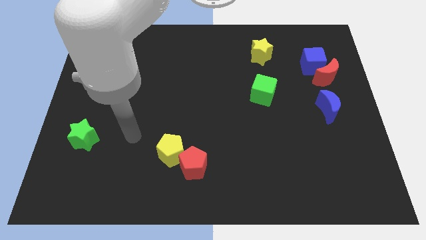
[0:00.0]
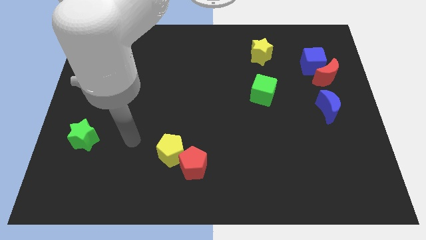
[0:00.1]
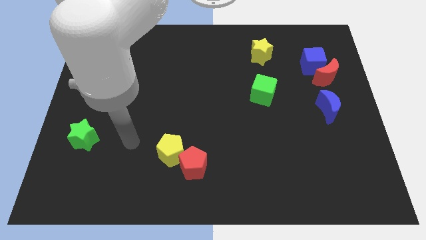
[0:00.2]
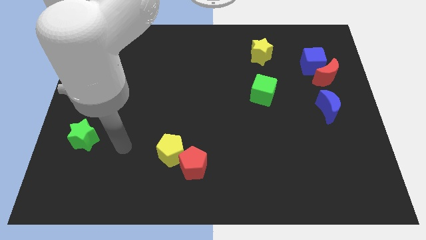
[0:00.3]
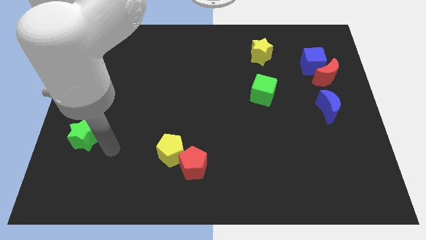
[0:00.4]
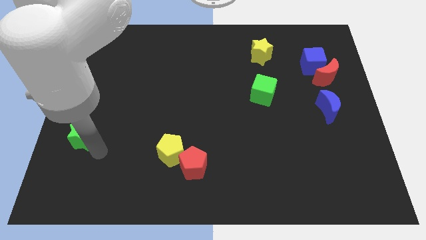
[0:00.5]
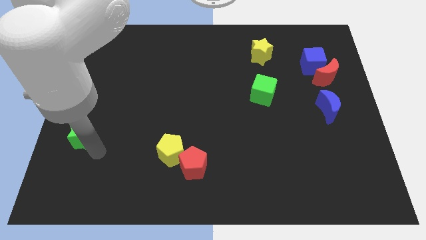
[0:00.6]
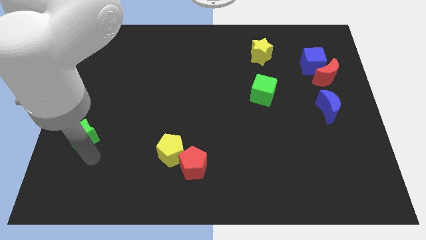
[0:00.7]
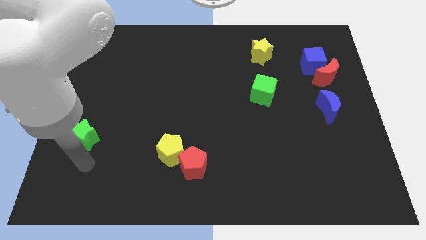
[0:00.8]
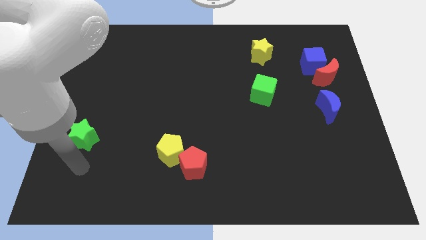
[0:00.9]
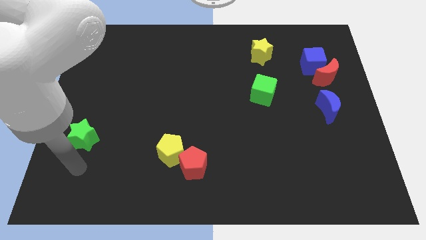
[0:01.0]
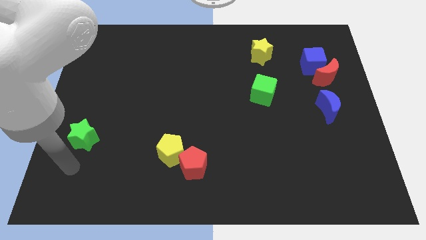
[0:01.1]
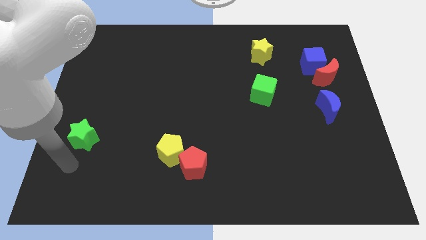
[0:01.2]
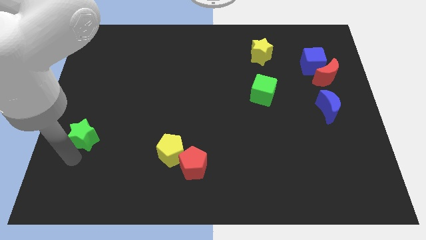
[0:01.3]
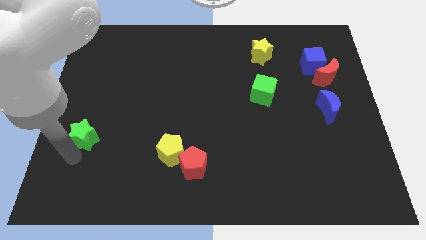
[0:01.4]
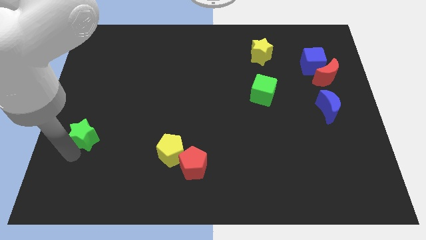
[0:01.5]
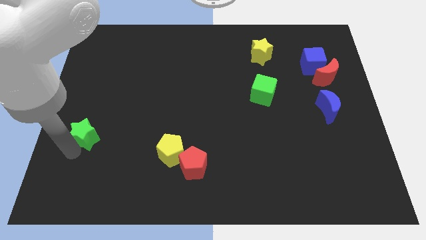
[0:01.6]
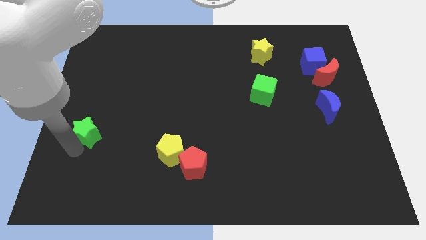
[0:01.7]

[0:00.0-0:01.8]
touch the bottom of green star

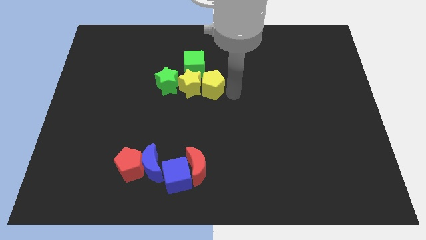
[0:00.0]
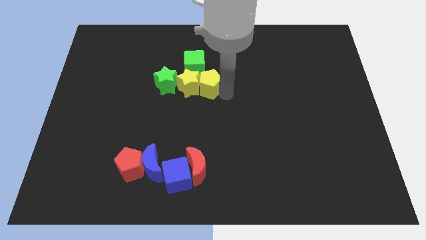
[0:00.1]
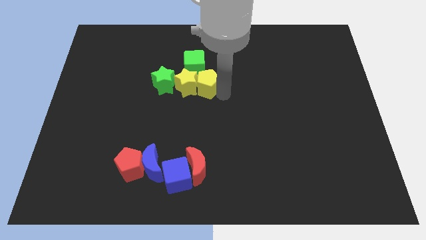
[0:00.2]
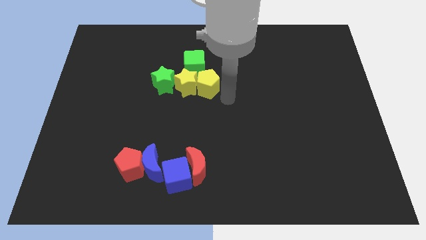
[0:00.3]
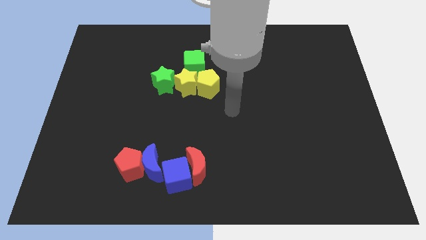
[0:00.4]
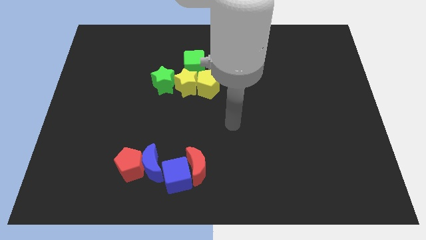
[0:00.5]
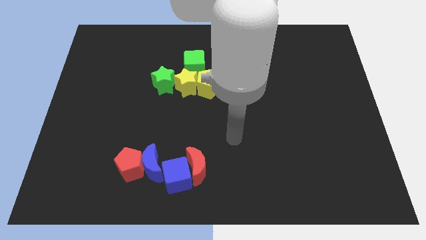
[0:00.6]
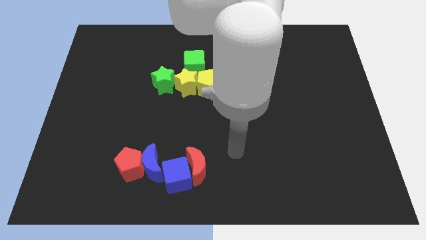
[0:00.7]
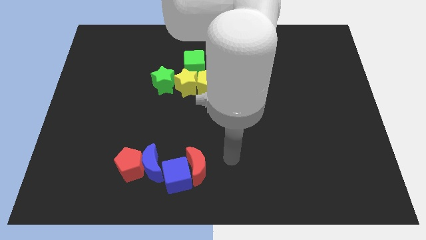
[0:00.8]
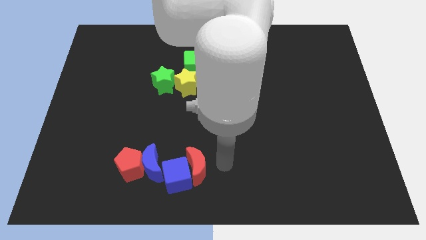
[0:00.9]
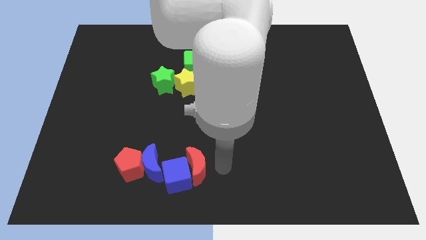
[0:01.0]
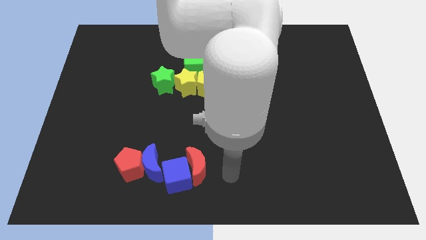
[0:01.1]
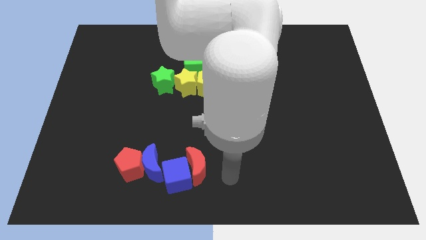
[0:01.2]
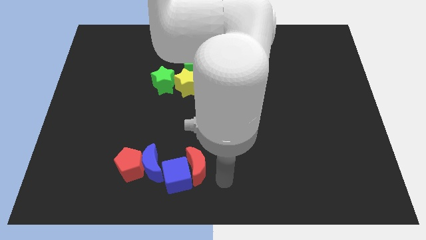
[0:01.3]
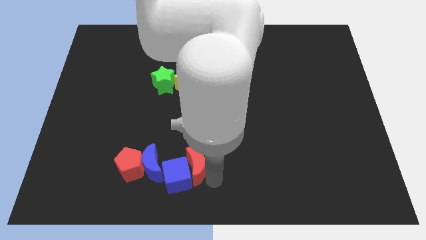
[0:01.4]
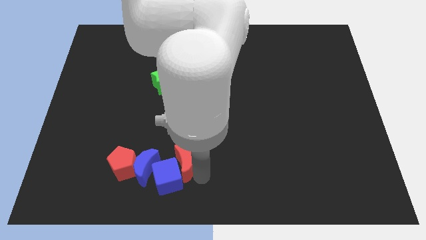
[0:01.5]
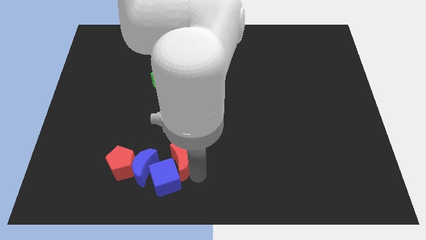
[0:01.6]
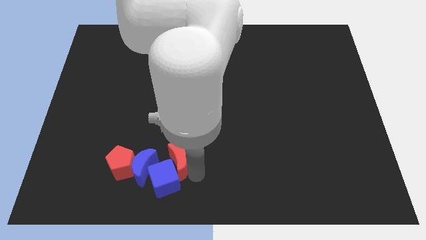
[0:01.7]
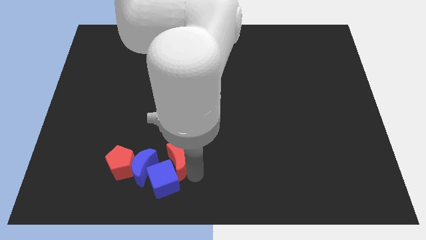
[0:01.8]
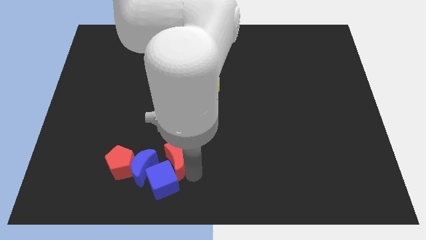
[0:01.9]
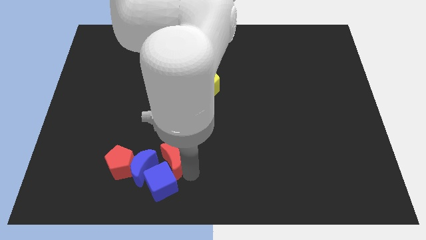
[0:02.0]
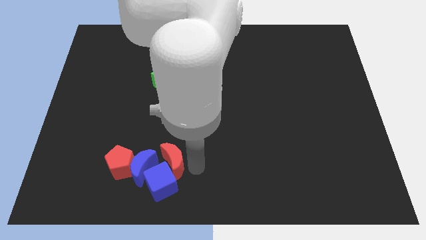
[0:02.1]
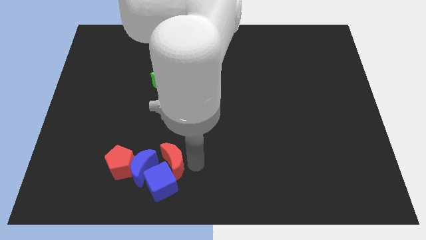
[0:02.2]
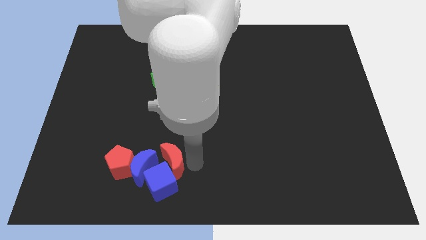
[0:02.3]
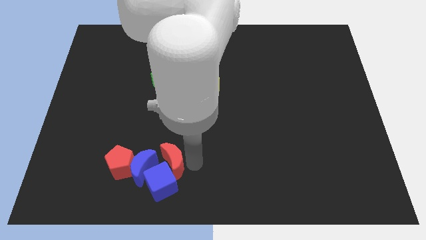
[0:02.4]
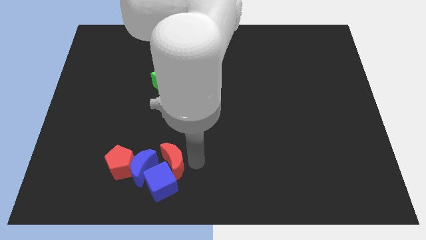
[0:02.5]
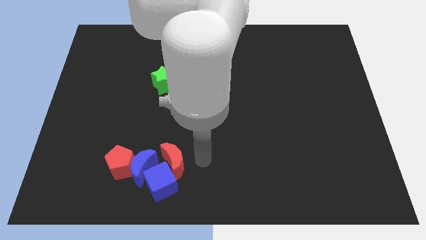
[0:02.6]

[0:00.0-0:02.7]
push the blue and red blocks together

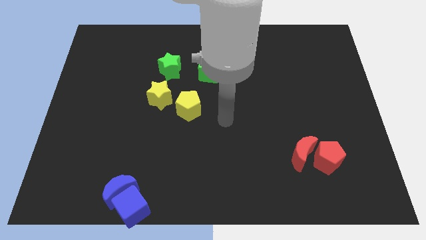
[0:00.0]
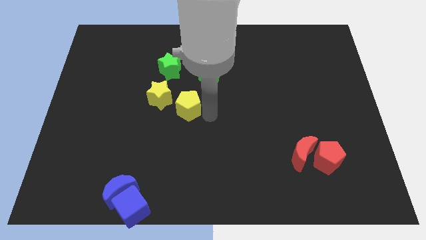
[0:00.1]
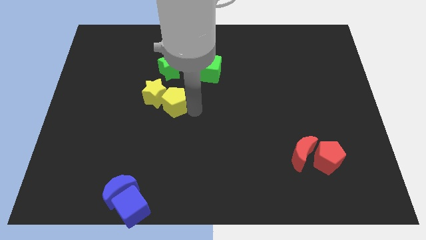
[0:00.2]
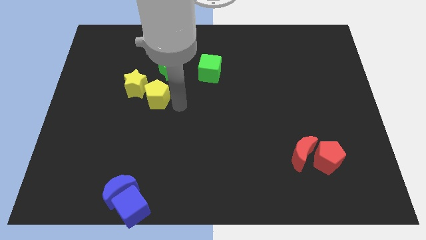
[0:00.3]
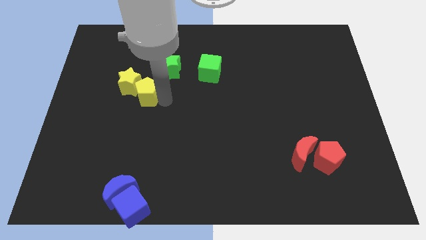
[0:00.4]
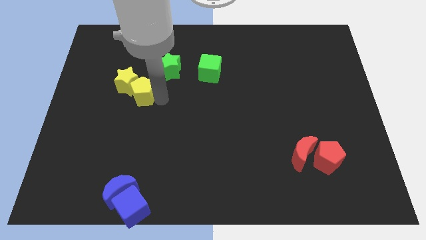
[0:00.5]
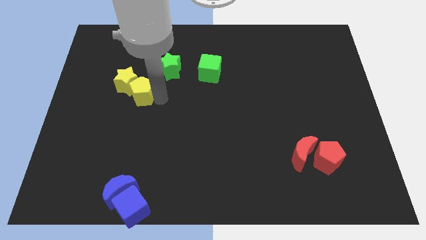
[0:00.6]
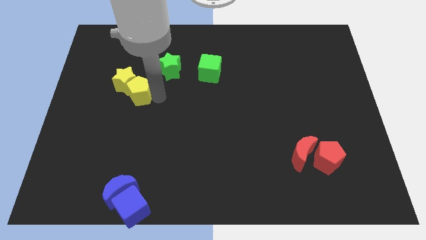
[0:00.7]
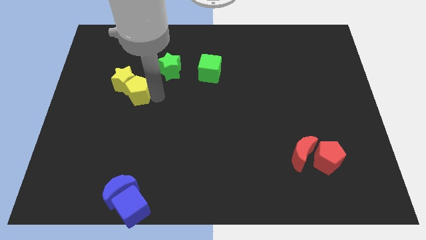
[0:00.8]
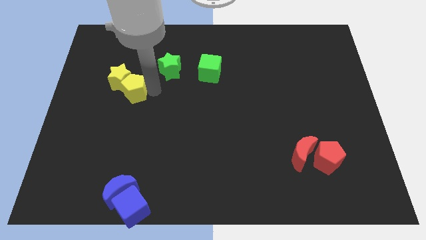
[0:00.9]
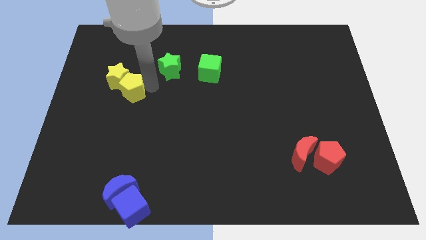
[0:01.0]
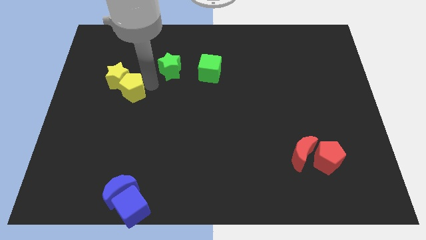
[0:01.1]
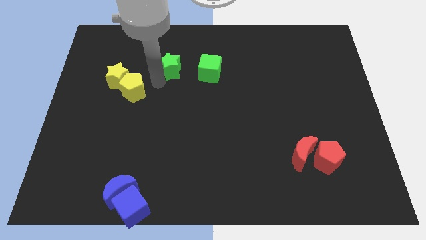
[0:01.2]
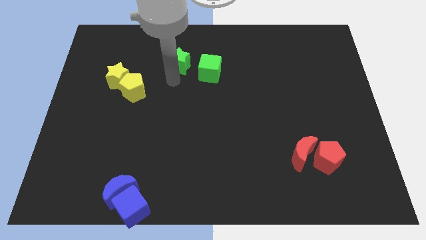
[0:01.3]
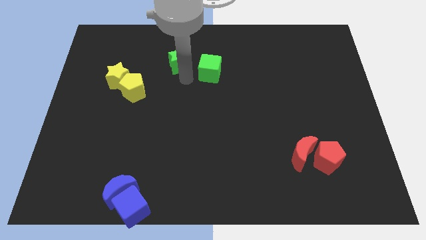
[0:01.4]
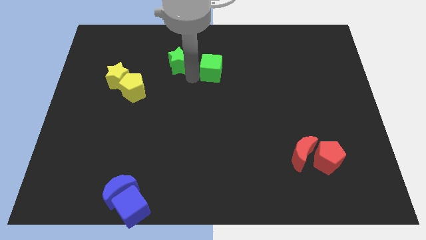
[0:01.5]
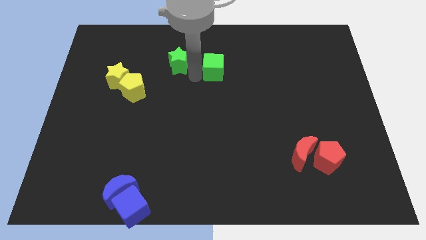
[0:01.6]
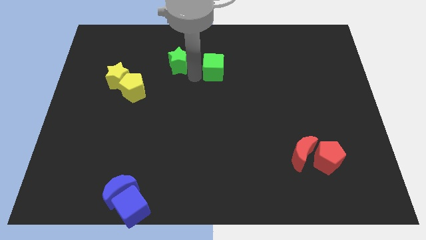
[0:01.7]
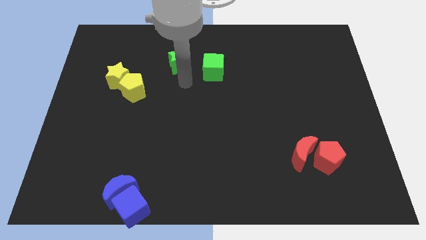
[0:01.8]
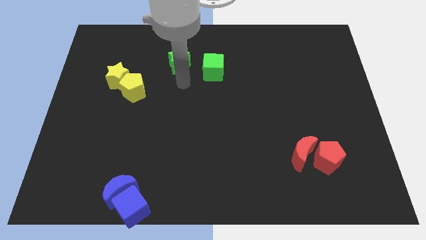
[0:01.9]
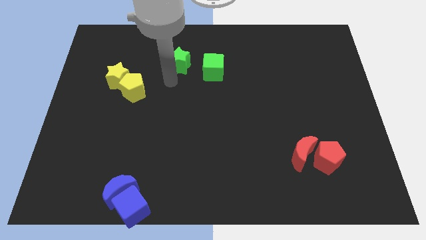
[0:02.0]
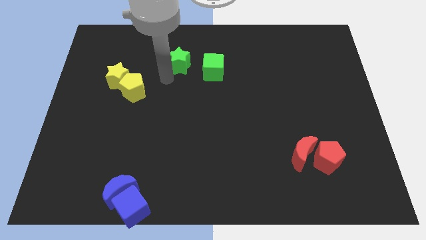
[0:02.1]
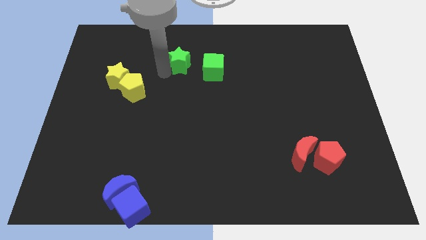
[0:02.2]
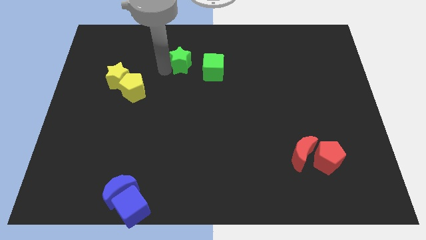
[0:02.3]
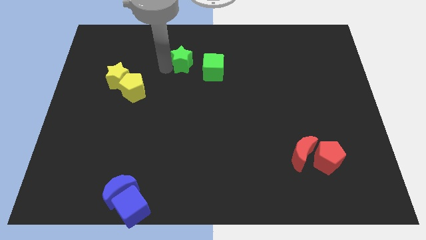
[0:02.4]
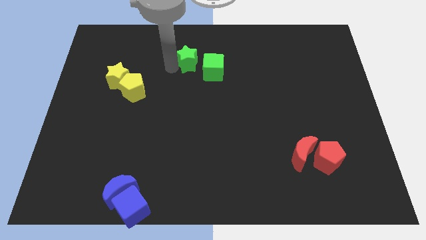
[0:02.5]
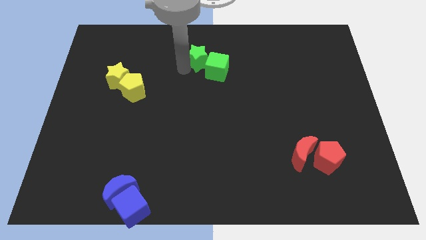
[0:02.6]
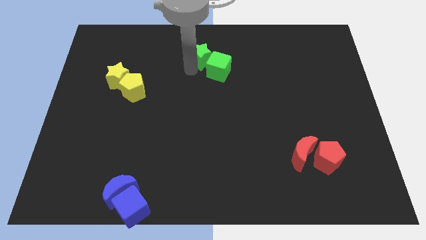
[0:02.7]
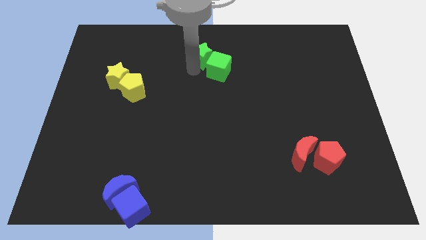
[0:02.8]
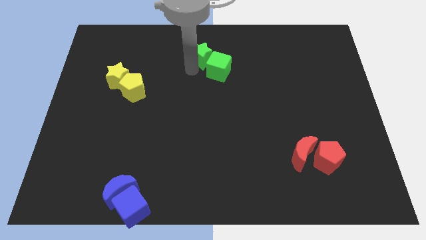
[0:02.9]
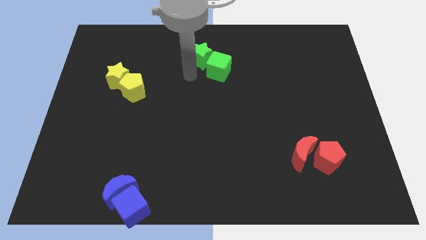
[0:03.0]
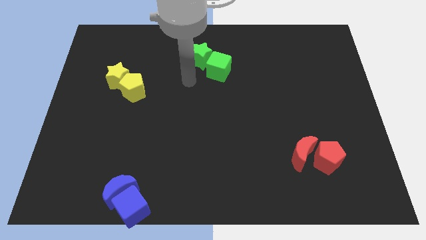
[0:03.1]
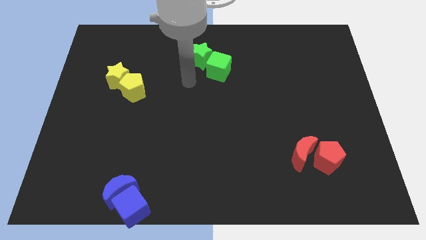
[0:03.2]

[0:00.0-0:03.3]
separate the green blocks and yellow blocks

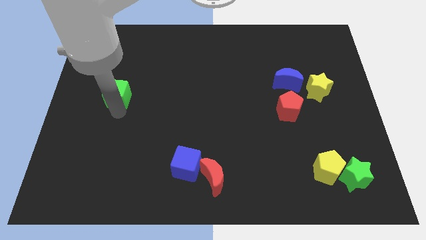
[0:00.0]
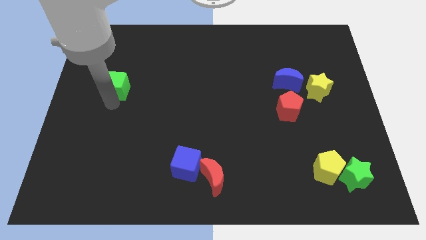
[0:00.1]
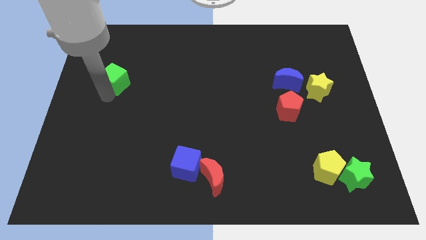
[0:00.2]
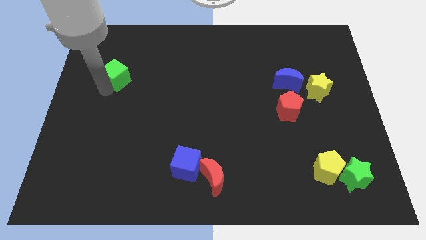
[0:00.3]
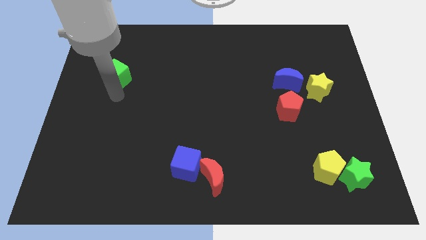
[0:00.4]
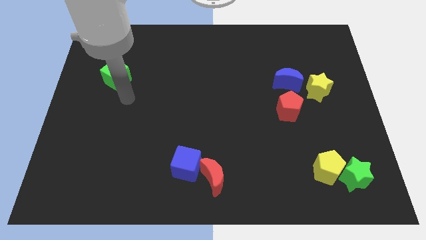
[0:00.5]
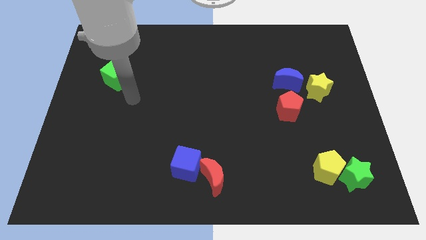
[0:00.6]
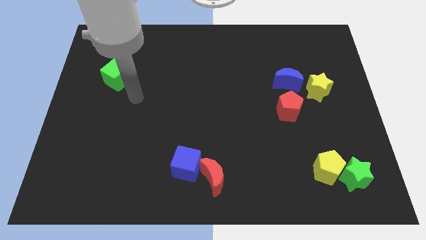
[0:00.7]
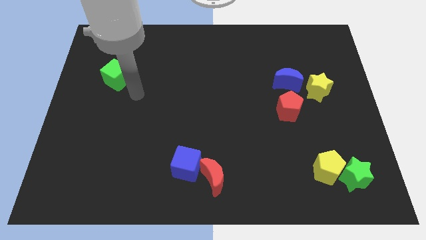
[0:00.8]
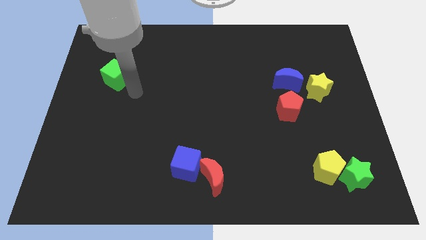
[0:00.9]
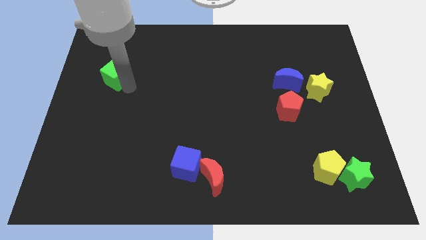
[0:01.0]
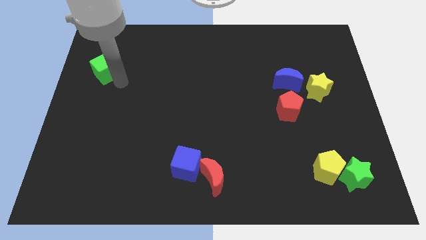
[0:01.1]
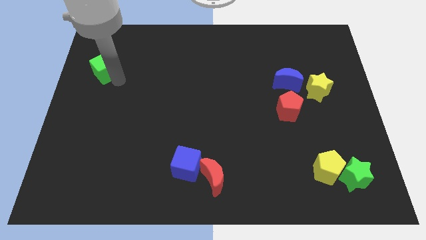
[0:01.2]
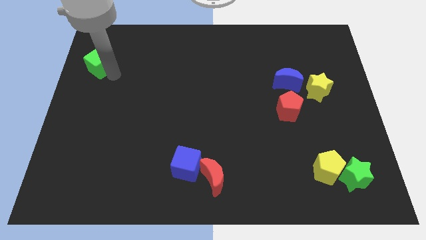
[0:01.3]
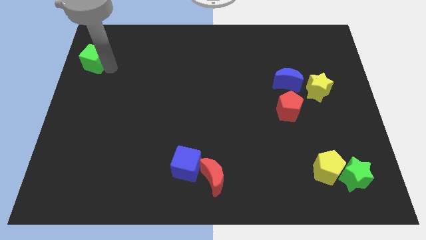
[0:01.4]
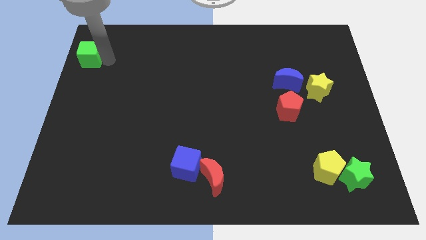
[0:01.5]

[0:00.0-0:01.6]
drag the green cube slightly upwards
